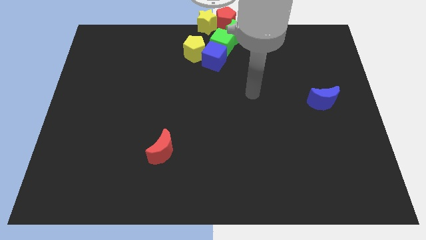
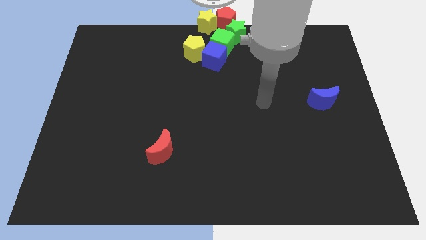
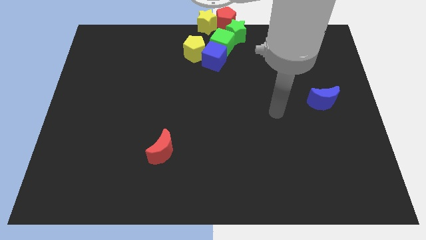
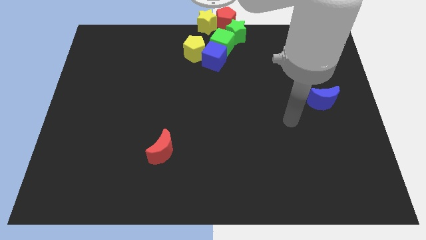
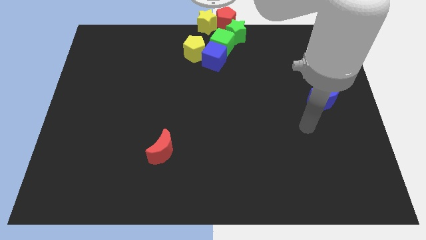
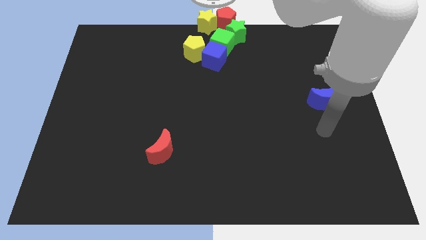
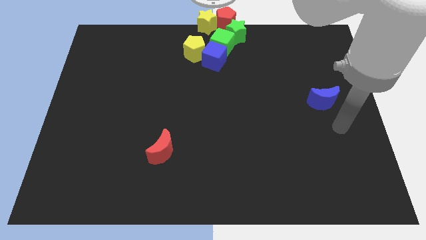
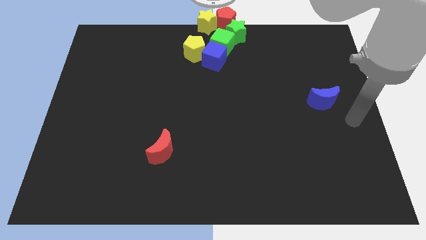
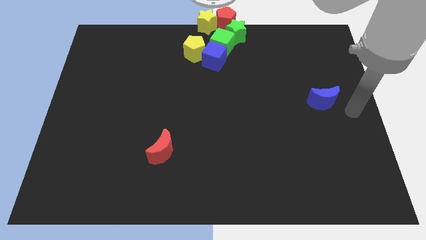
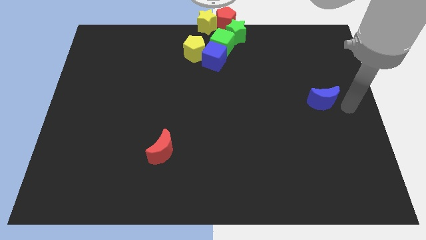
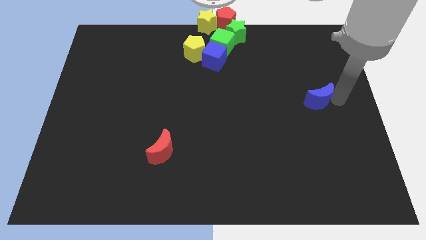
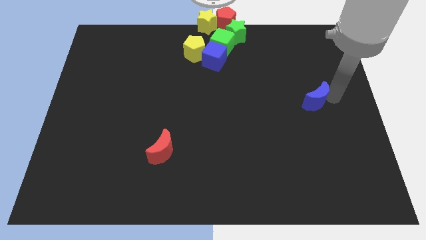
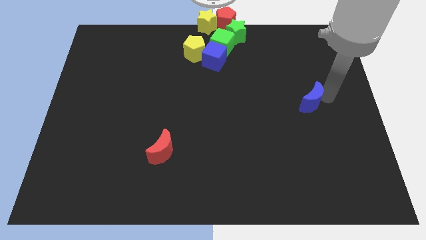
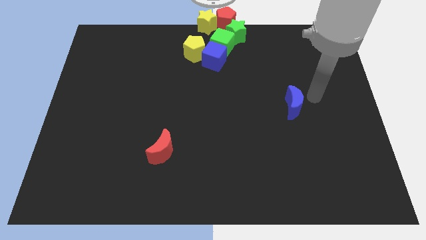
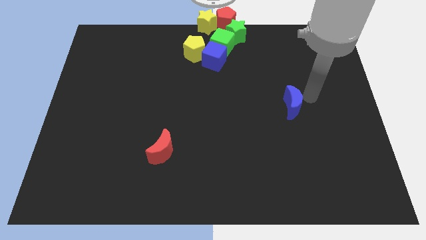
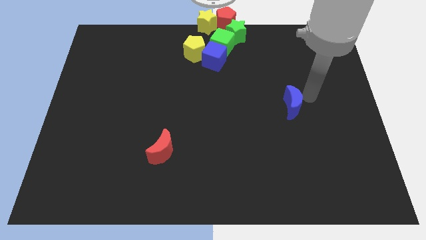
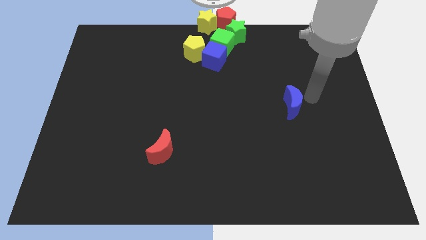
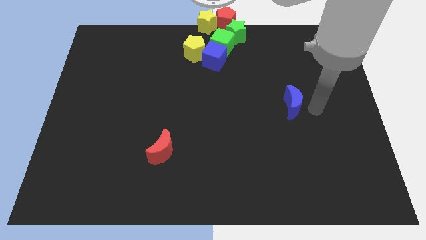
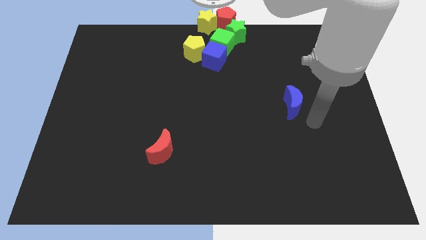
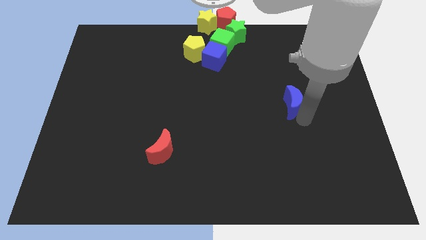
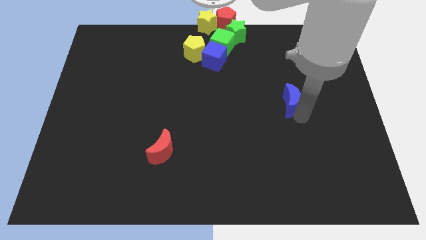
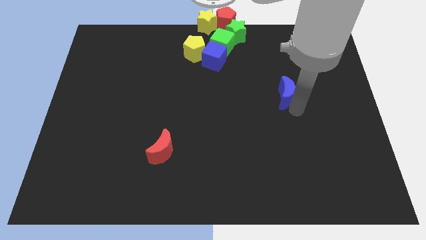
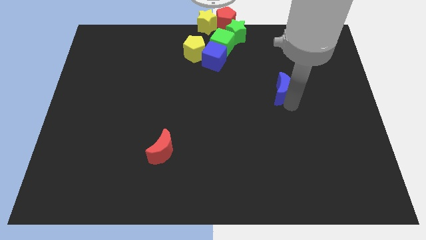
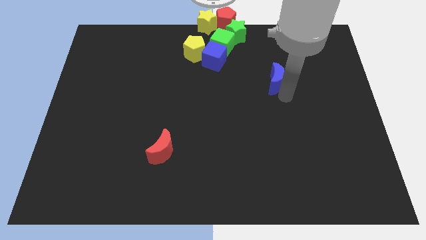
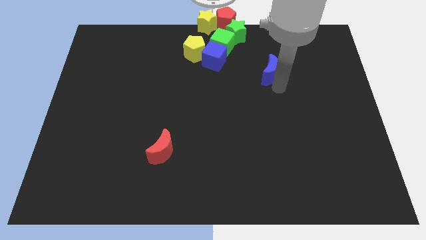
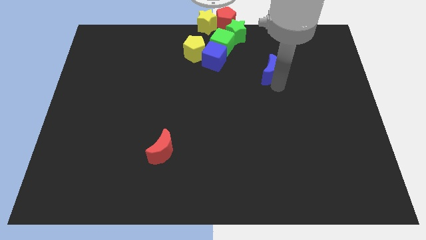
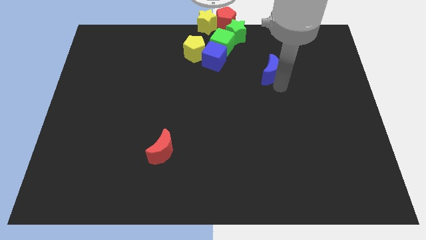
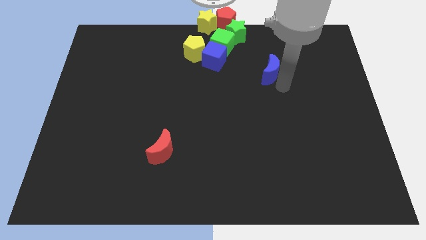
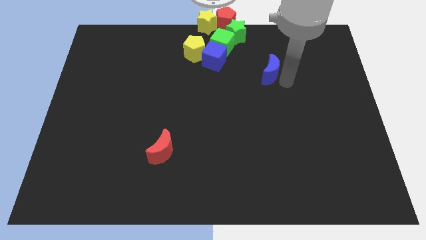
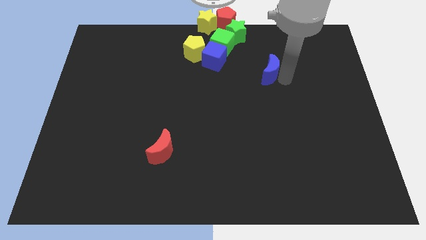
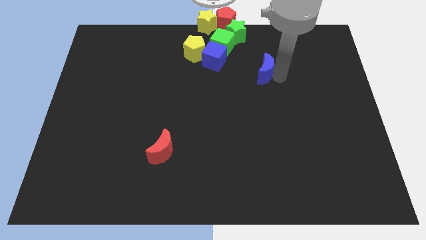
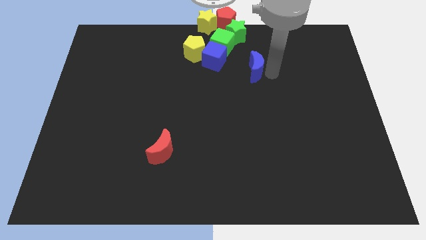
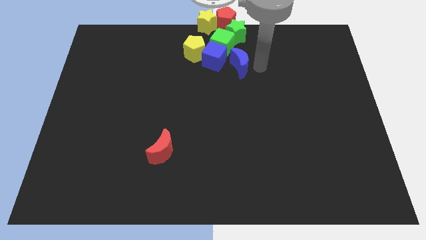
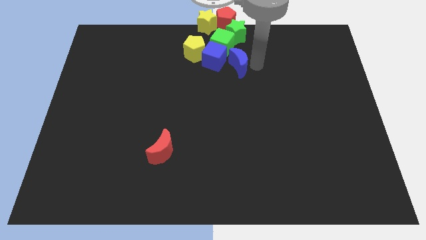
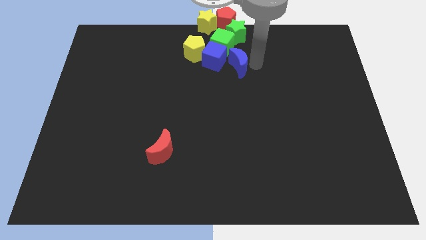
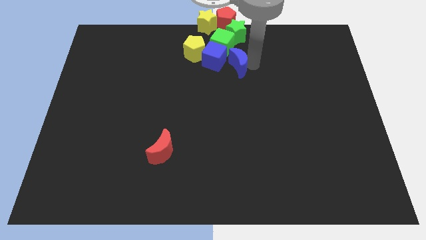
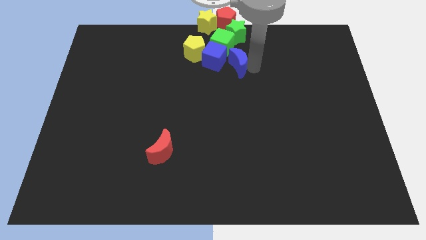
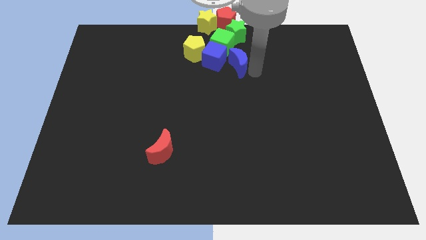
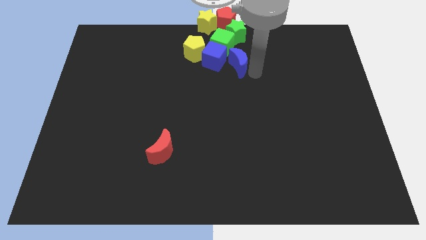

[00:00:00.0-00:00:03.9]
move the blue crescent towards the top center

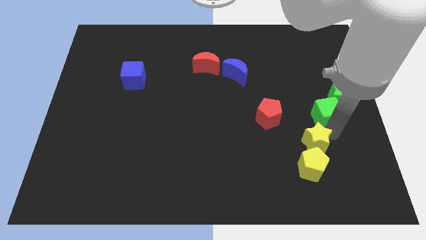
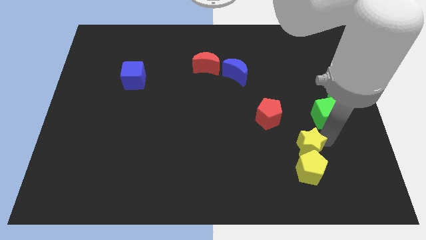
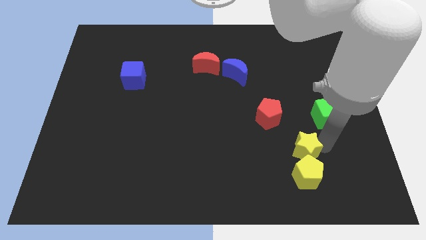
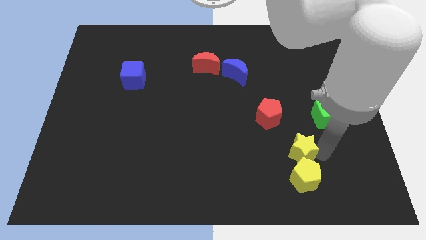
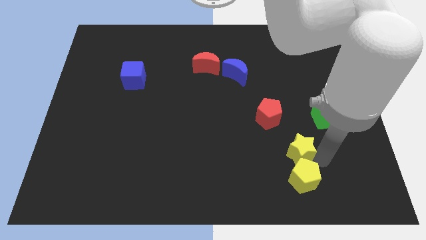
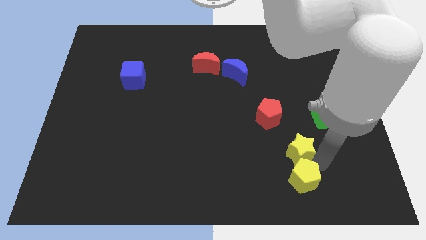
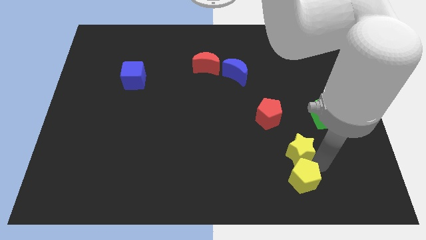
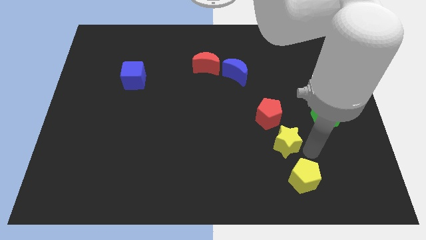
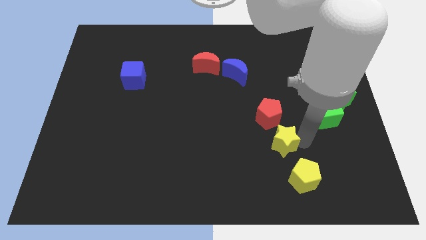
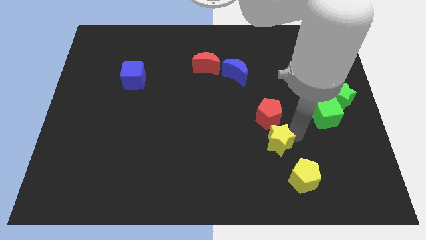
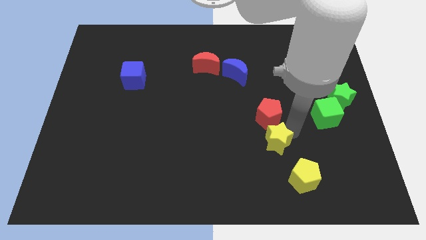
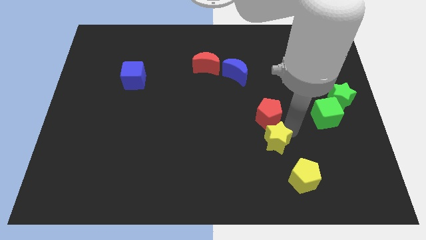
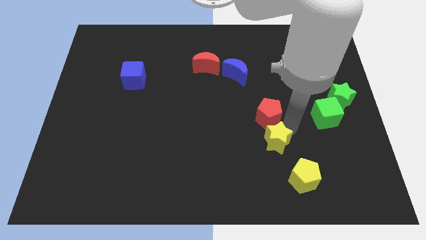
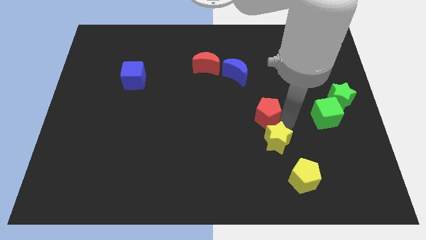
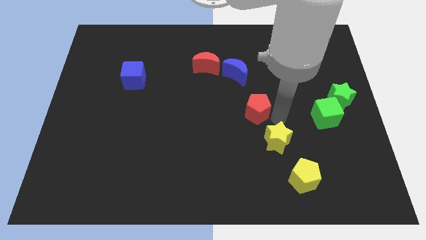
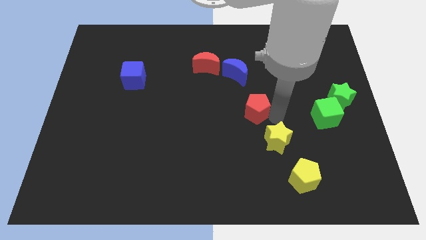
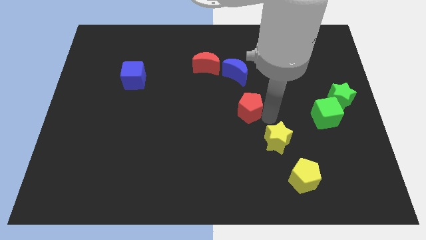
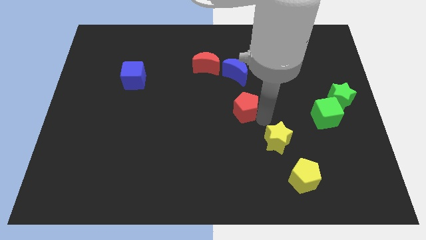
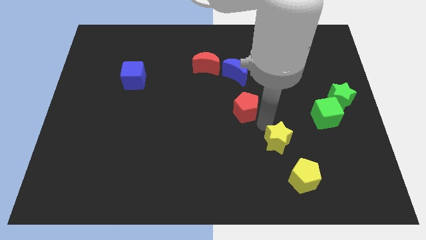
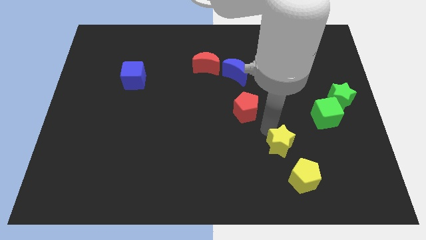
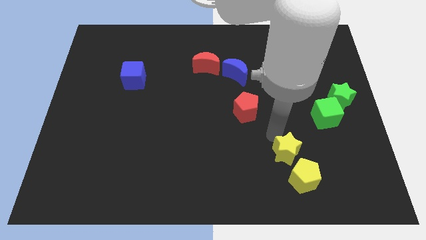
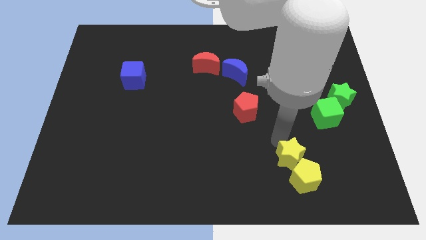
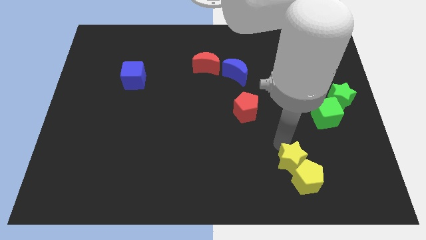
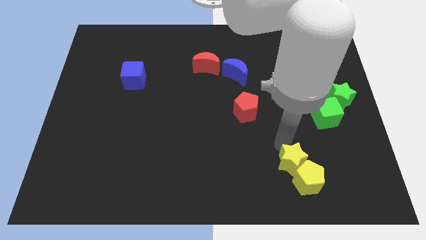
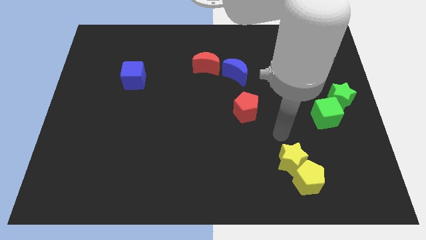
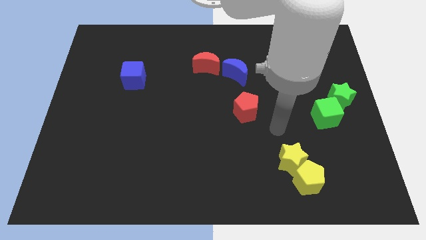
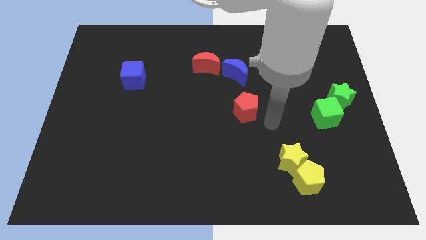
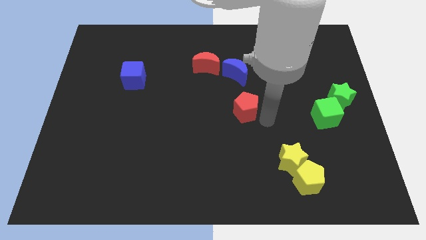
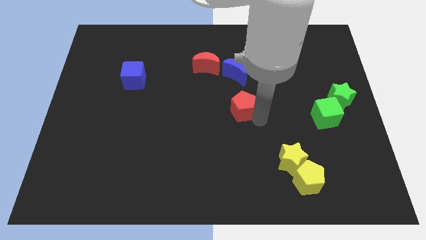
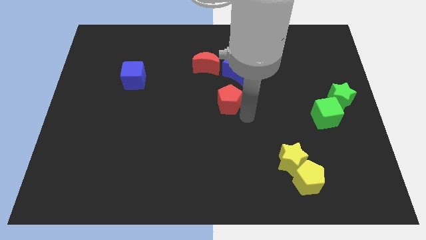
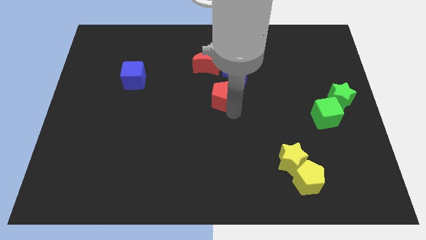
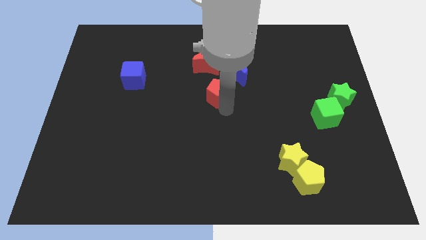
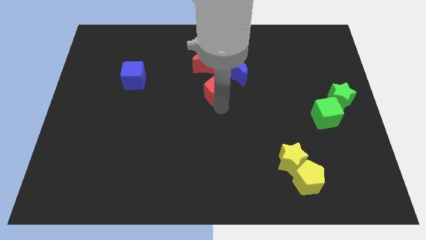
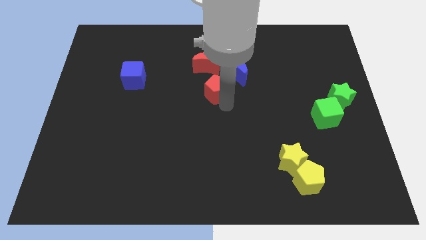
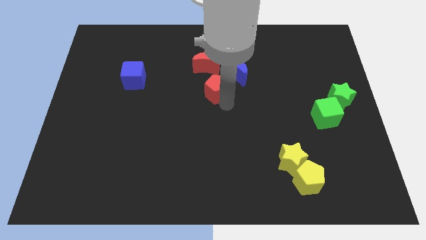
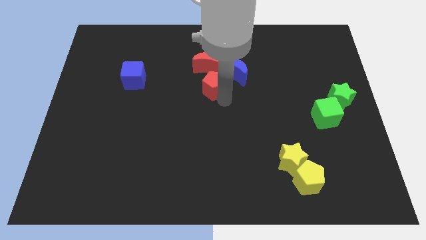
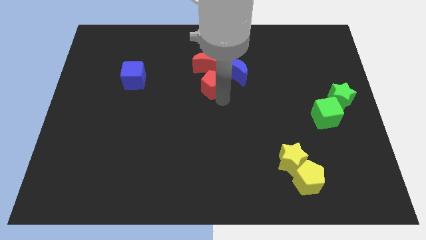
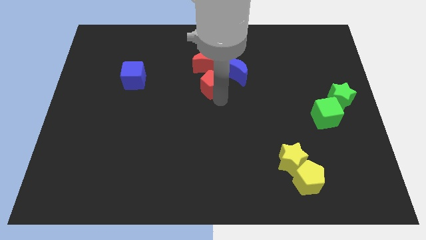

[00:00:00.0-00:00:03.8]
move the yellow blocks and red pentagon diagonal to each other

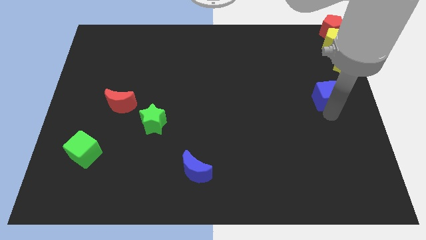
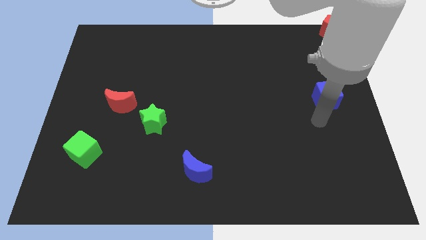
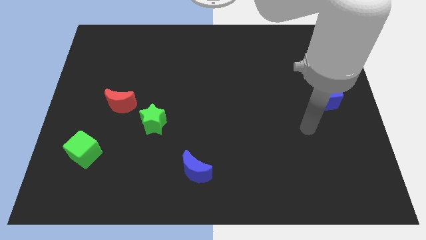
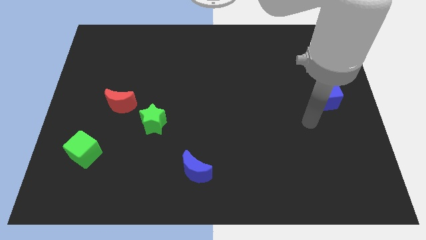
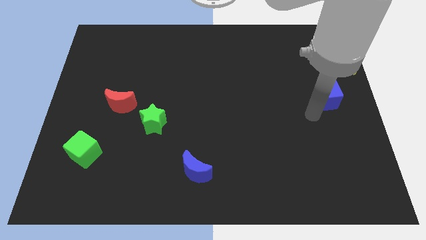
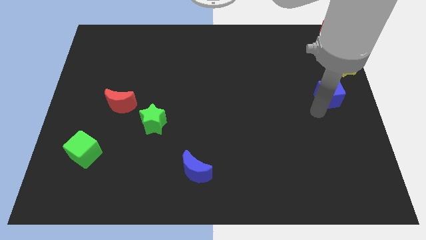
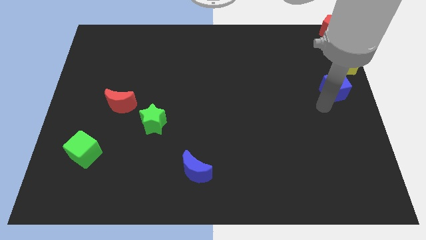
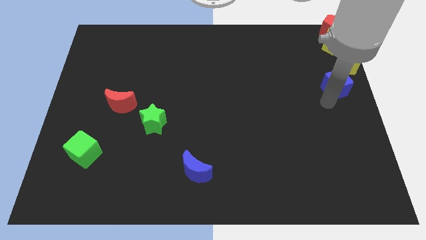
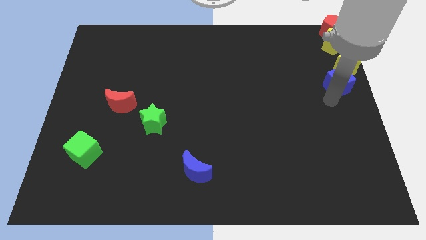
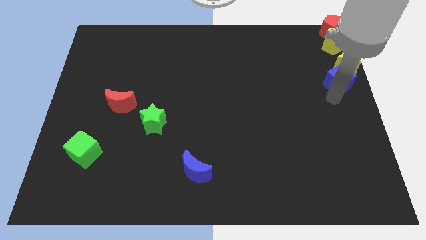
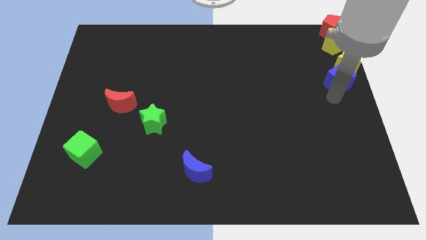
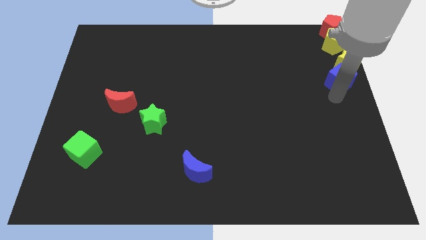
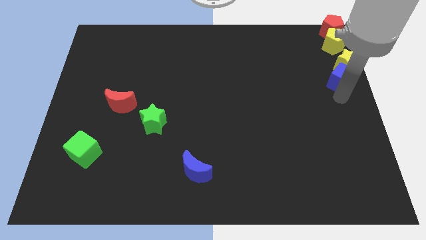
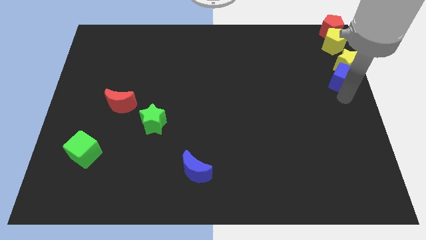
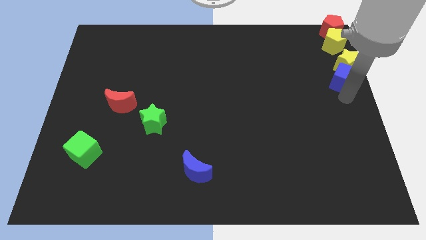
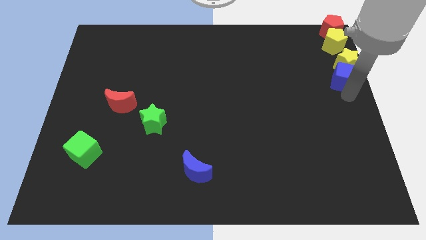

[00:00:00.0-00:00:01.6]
slide the blue cube into the bottom side of the yellow star
